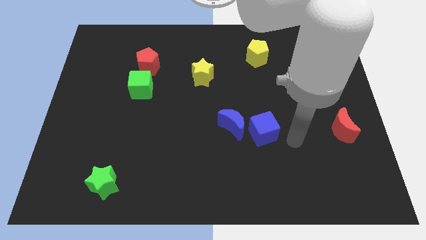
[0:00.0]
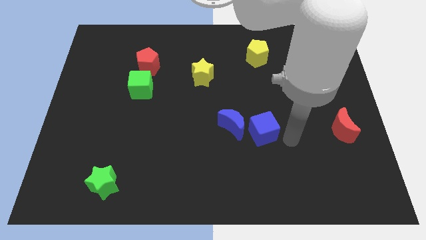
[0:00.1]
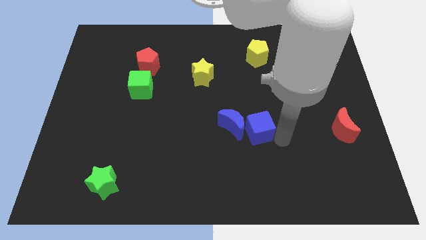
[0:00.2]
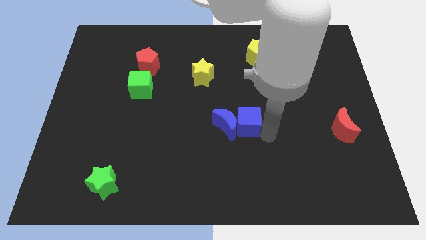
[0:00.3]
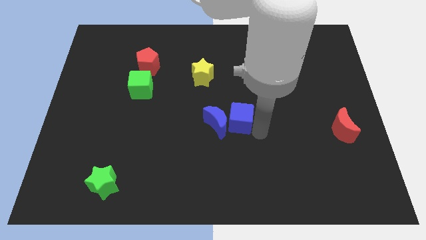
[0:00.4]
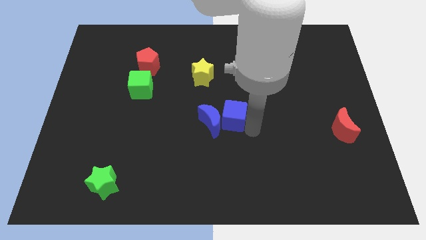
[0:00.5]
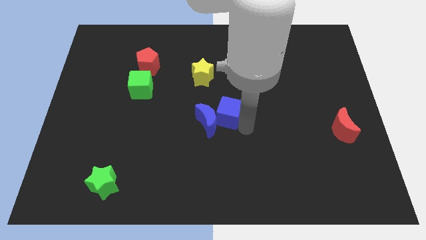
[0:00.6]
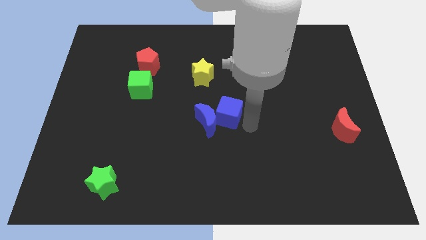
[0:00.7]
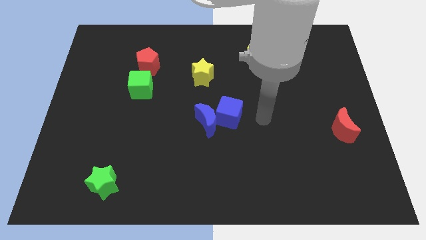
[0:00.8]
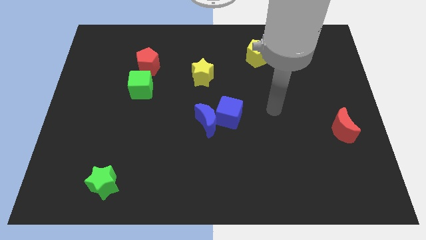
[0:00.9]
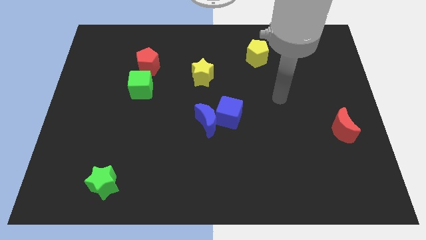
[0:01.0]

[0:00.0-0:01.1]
put the blue blocks at the center of the board

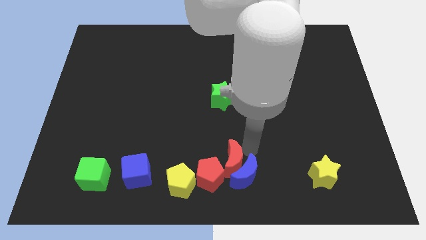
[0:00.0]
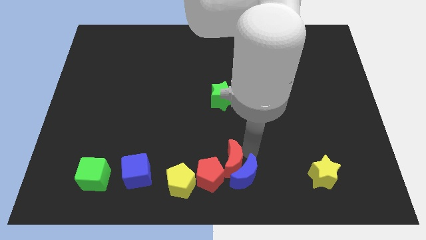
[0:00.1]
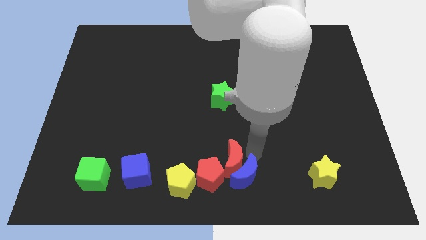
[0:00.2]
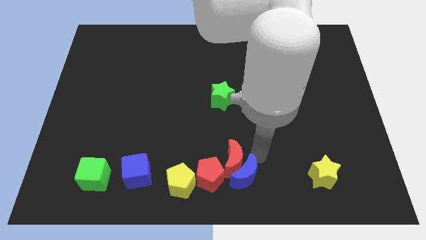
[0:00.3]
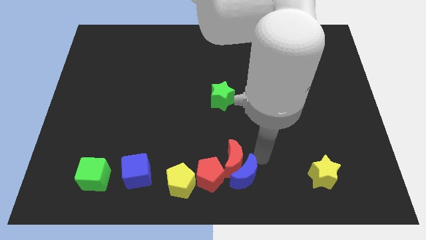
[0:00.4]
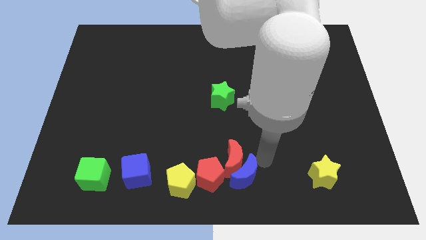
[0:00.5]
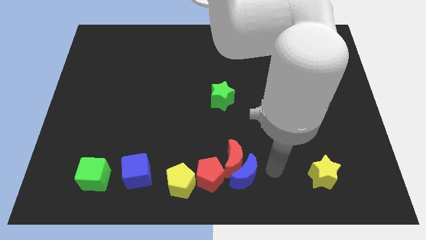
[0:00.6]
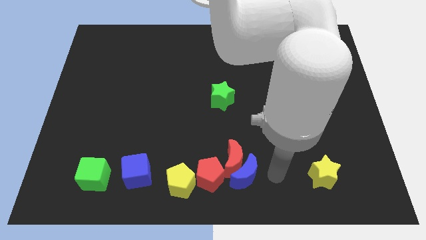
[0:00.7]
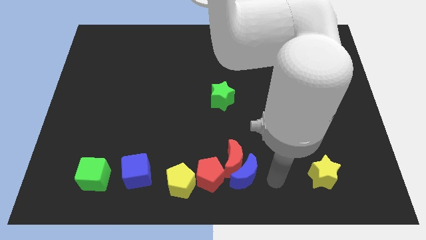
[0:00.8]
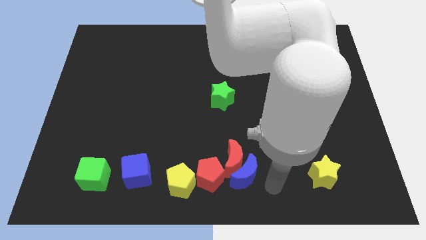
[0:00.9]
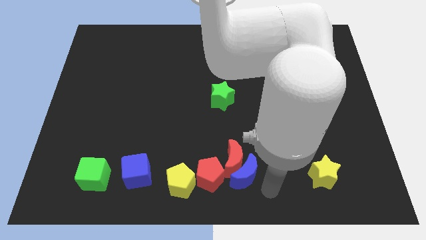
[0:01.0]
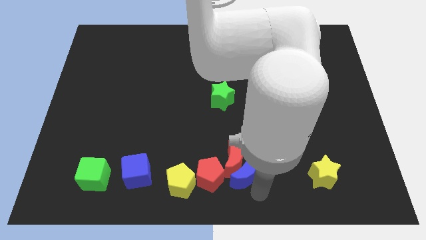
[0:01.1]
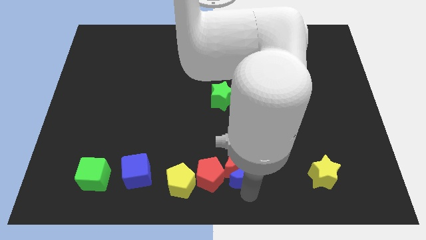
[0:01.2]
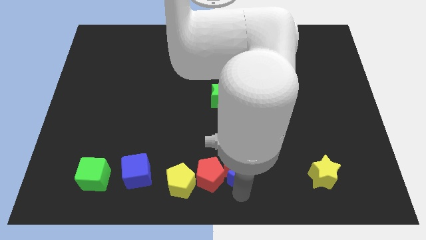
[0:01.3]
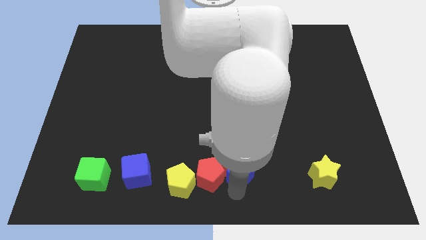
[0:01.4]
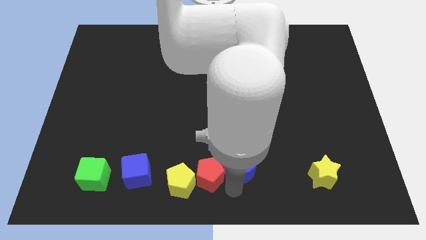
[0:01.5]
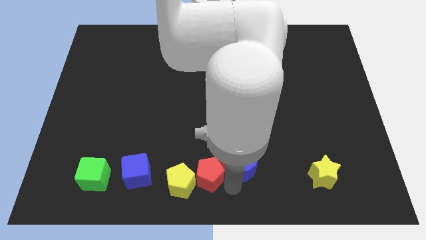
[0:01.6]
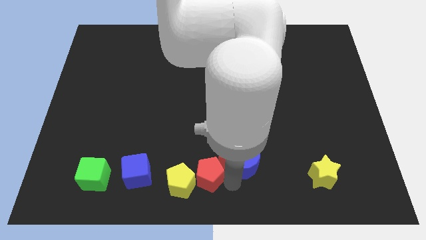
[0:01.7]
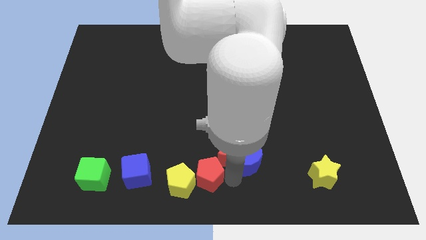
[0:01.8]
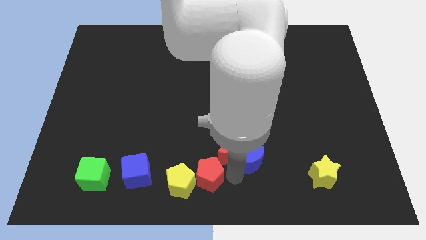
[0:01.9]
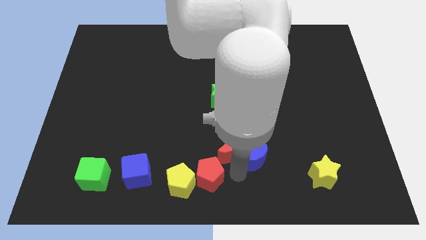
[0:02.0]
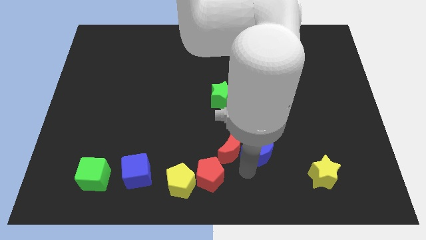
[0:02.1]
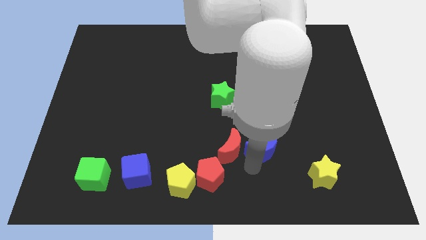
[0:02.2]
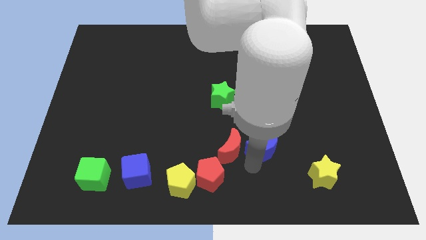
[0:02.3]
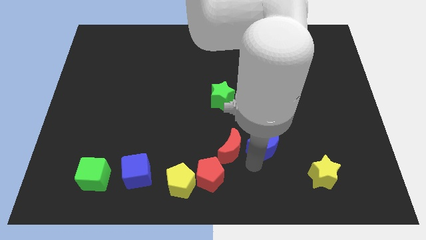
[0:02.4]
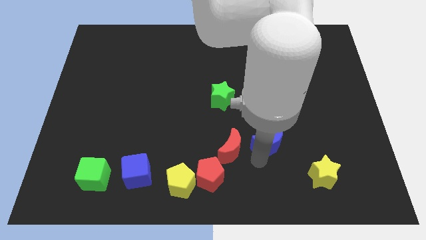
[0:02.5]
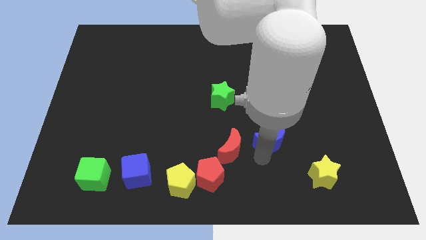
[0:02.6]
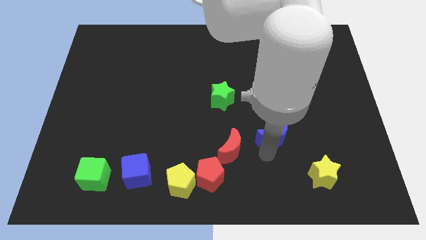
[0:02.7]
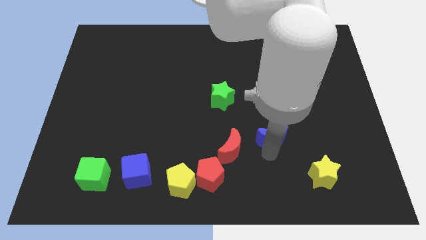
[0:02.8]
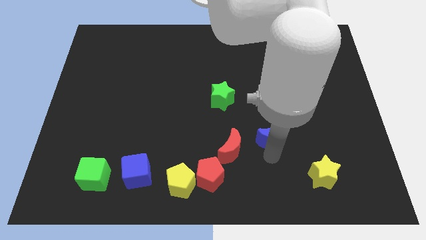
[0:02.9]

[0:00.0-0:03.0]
separate the blue moon from the red crescent

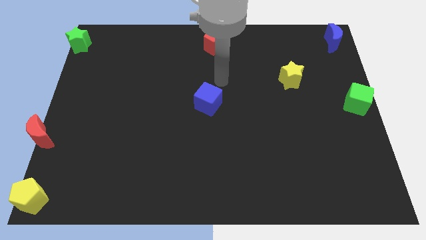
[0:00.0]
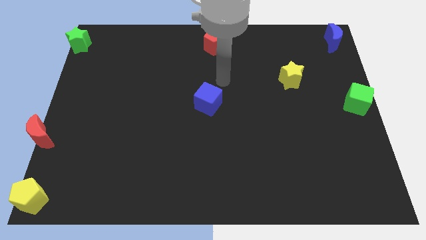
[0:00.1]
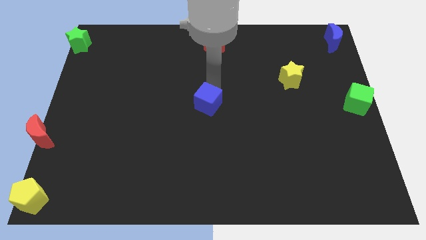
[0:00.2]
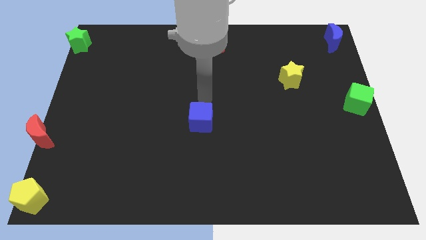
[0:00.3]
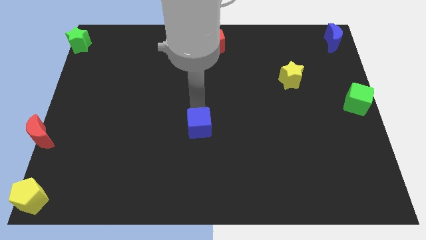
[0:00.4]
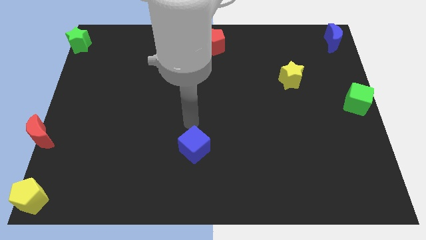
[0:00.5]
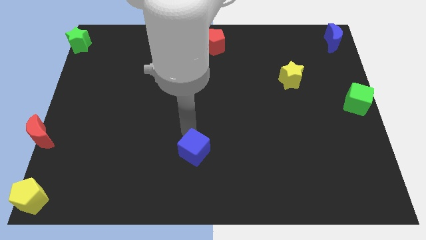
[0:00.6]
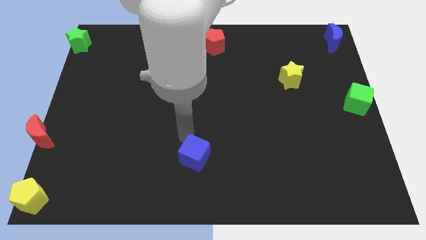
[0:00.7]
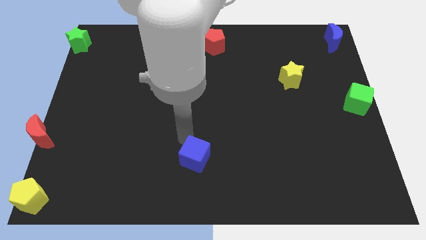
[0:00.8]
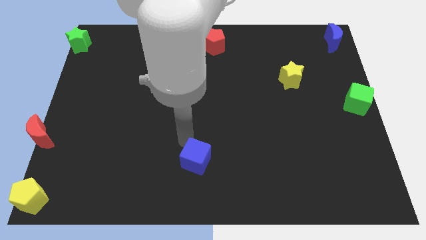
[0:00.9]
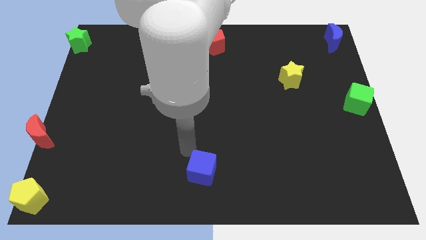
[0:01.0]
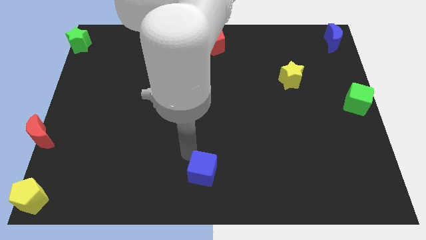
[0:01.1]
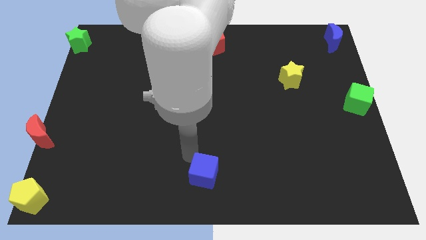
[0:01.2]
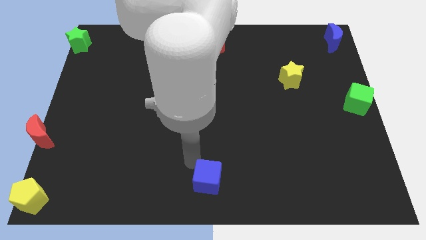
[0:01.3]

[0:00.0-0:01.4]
move blue cube towards the bottom center of the board

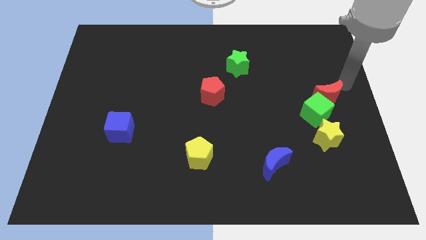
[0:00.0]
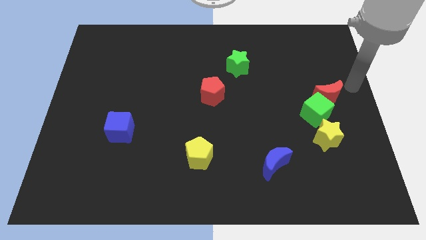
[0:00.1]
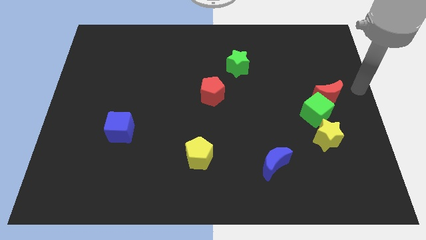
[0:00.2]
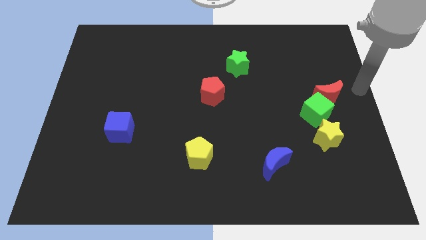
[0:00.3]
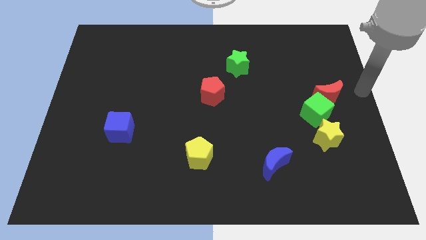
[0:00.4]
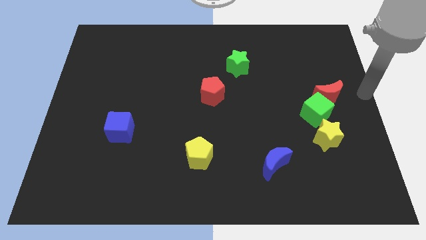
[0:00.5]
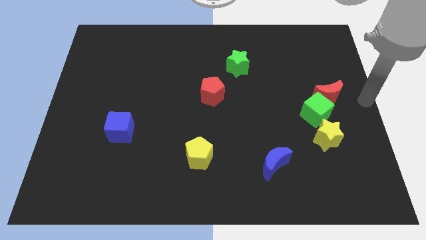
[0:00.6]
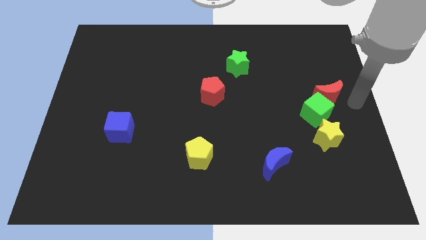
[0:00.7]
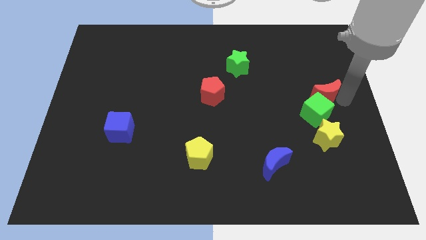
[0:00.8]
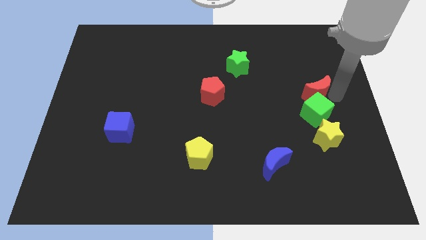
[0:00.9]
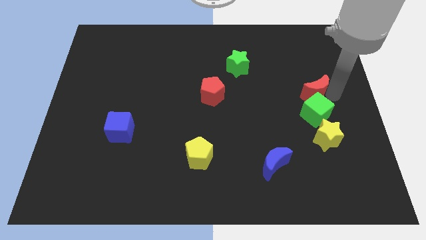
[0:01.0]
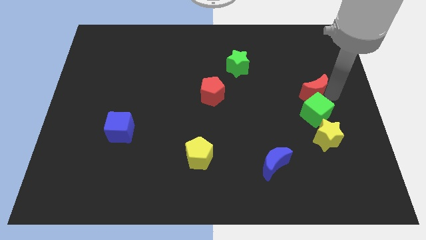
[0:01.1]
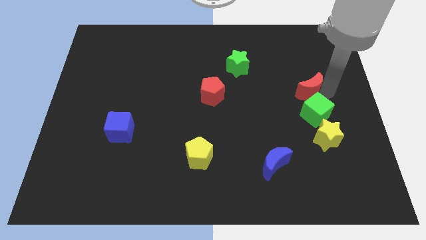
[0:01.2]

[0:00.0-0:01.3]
push red crescent above green cube

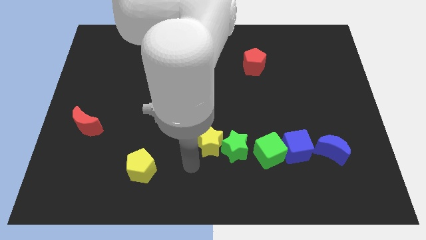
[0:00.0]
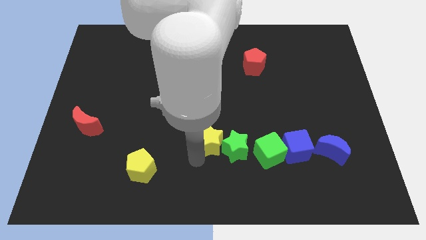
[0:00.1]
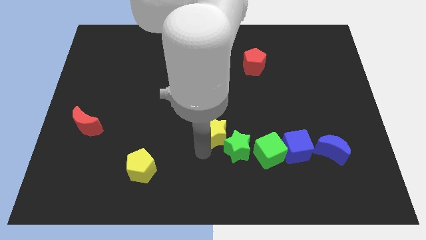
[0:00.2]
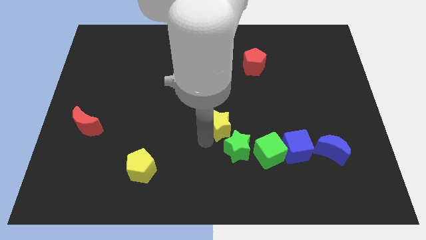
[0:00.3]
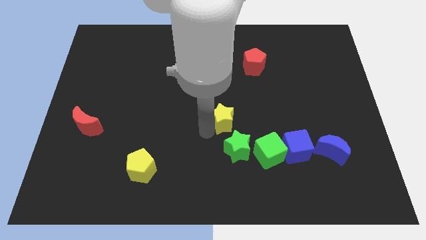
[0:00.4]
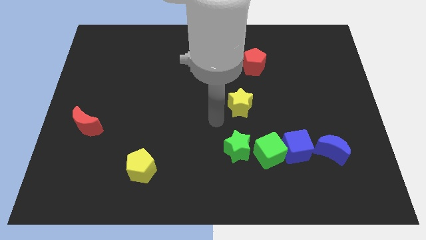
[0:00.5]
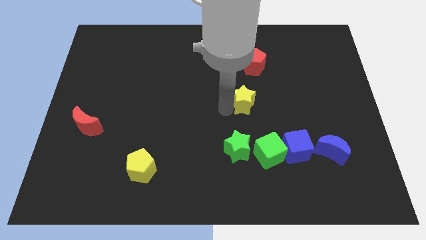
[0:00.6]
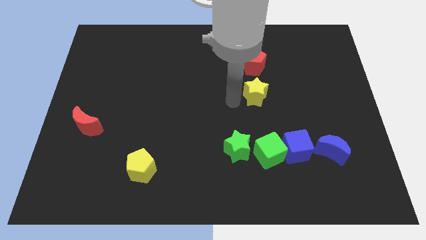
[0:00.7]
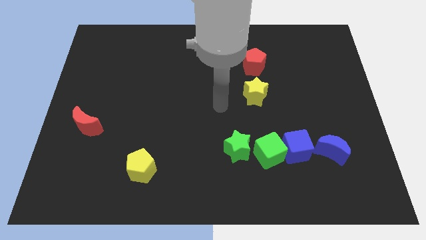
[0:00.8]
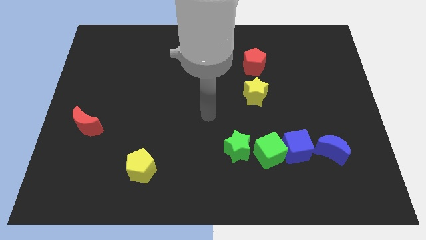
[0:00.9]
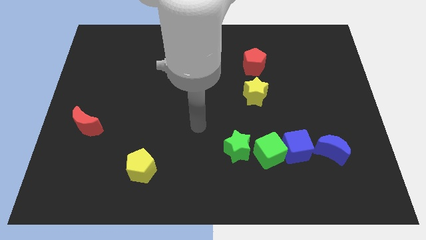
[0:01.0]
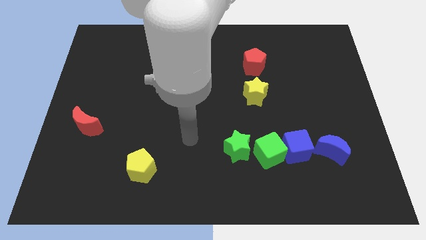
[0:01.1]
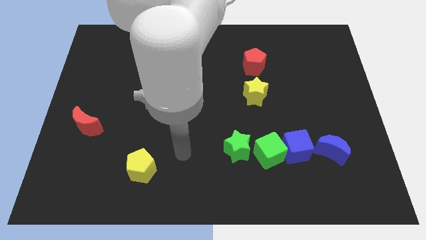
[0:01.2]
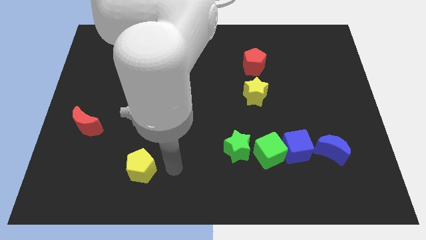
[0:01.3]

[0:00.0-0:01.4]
move yellow star away from the green star

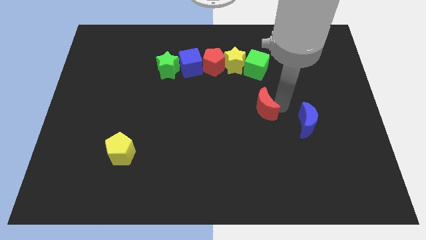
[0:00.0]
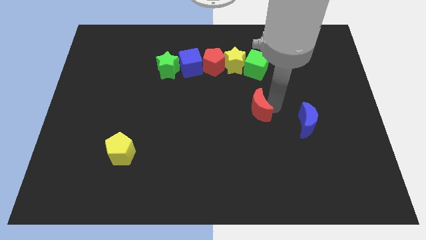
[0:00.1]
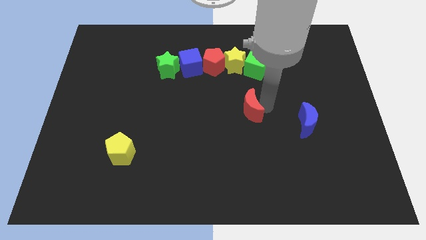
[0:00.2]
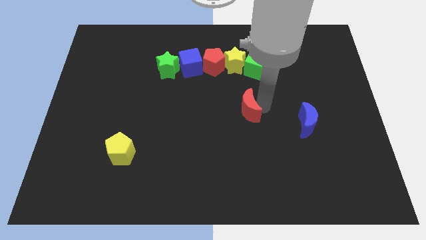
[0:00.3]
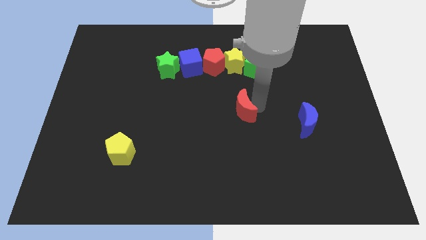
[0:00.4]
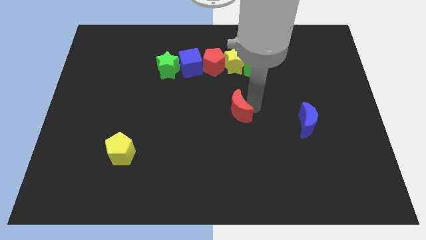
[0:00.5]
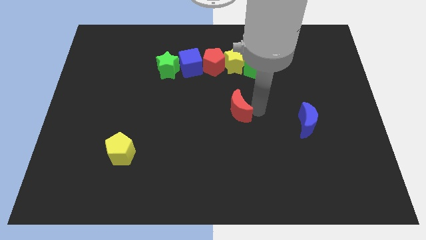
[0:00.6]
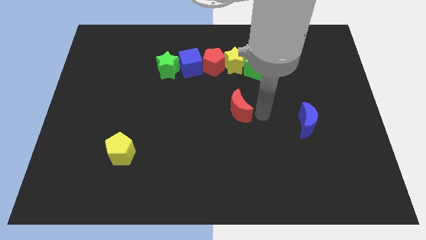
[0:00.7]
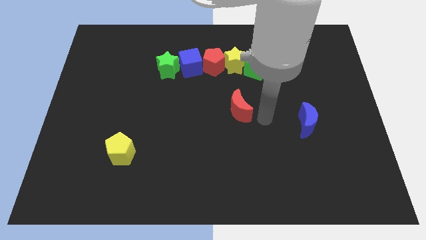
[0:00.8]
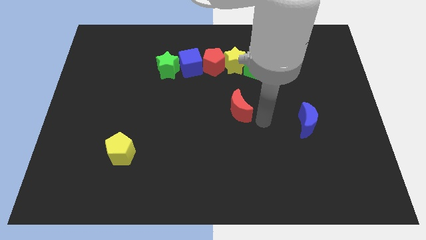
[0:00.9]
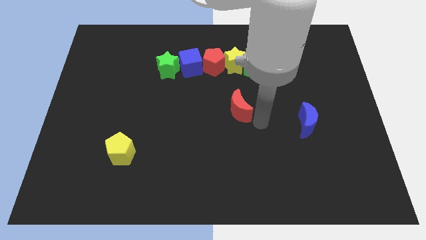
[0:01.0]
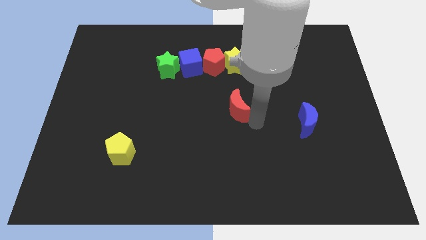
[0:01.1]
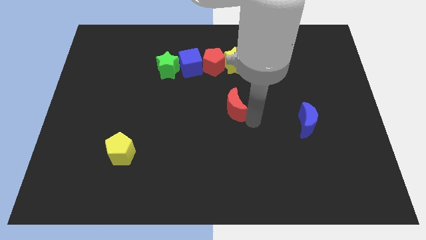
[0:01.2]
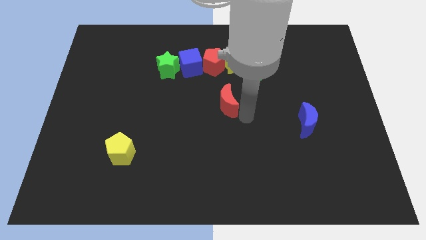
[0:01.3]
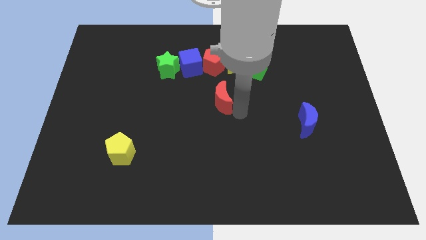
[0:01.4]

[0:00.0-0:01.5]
push red crescent to the left of the board
